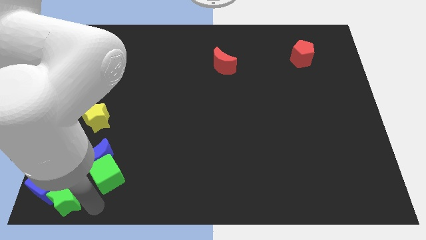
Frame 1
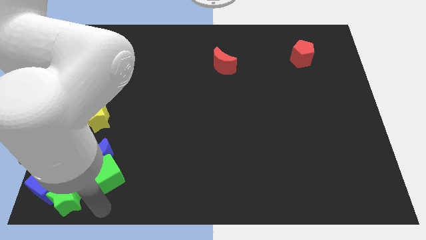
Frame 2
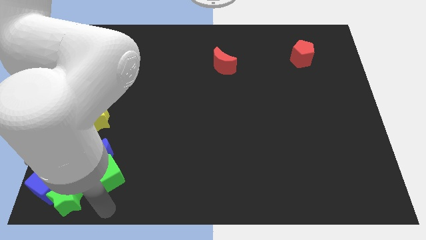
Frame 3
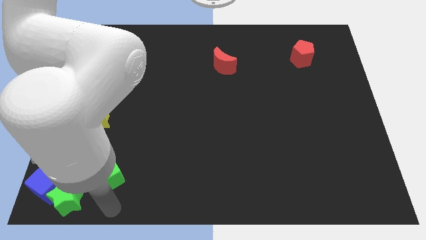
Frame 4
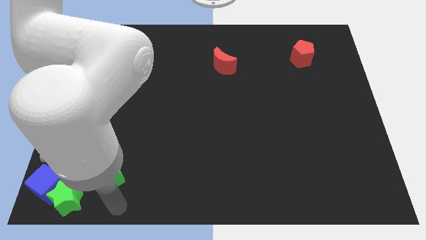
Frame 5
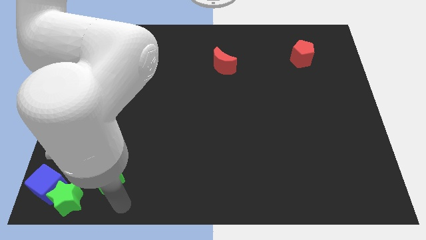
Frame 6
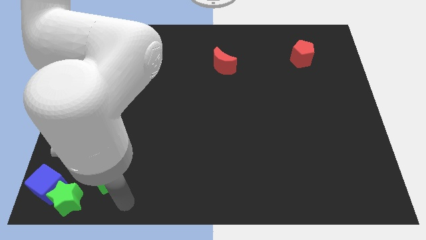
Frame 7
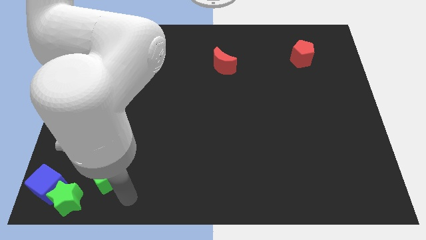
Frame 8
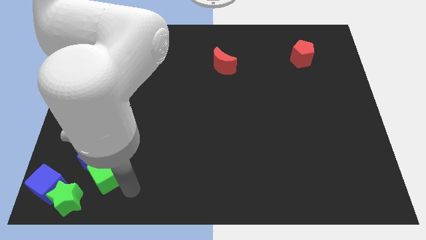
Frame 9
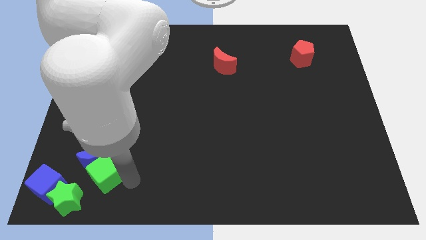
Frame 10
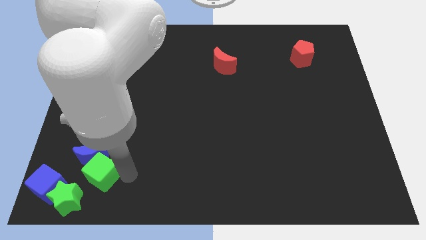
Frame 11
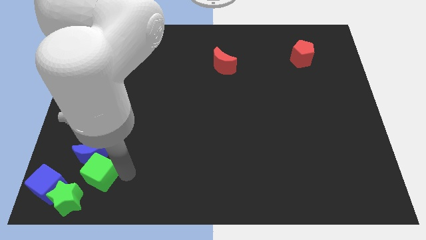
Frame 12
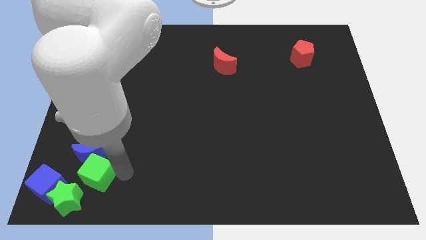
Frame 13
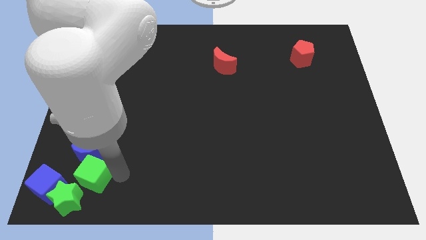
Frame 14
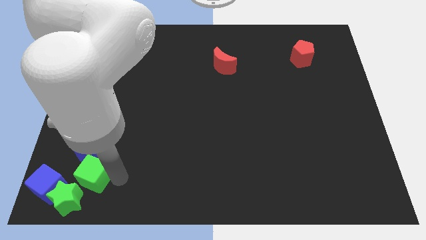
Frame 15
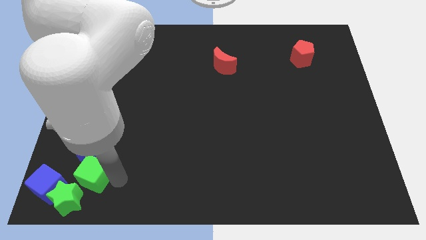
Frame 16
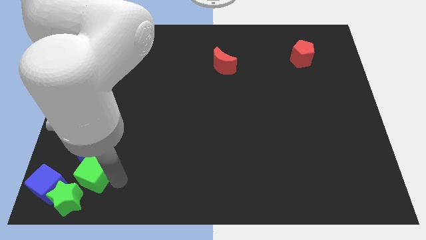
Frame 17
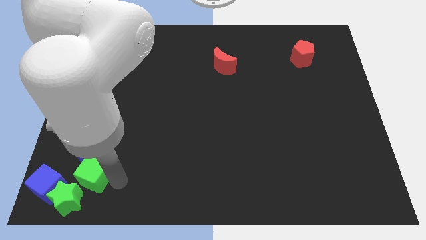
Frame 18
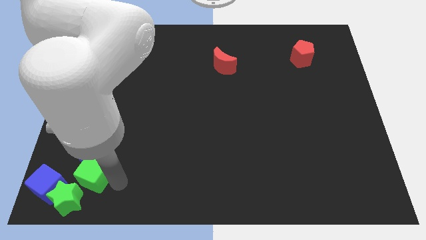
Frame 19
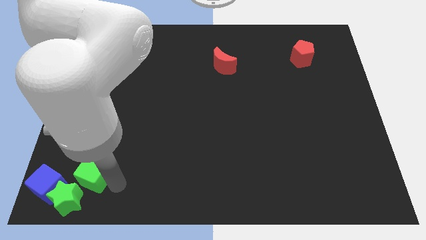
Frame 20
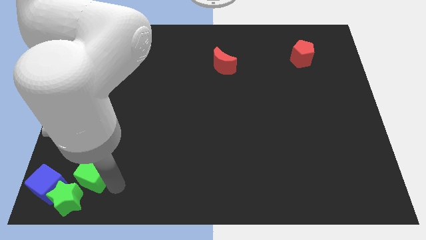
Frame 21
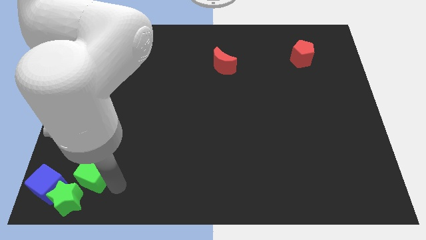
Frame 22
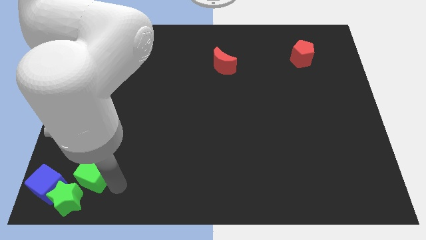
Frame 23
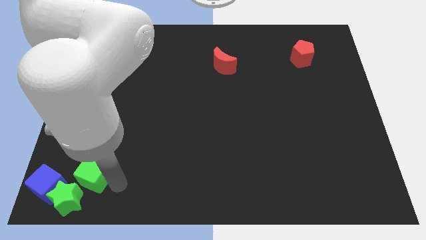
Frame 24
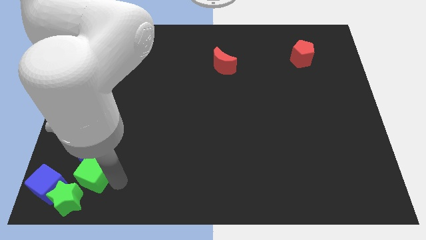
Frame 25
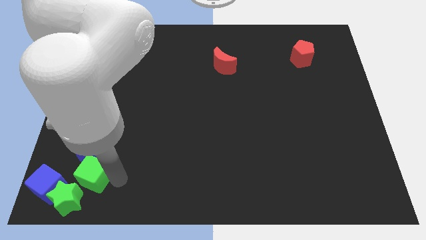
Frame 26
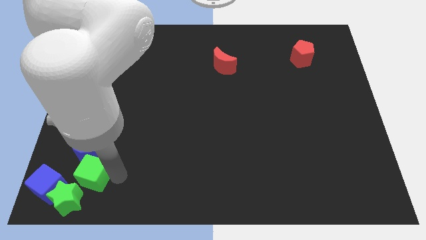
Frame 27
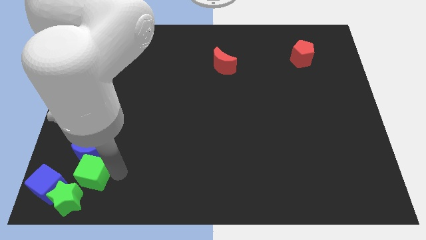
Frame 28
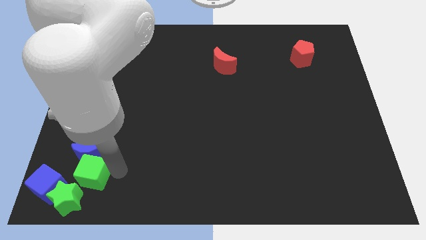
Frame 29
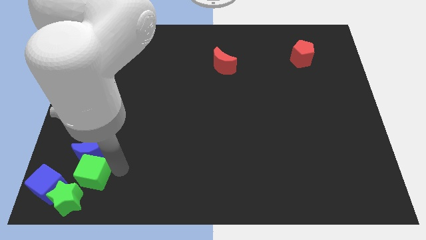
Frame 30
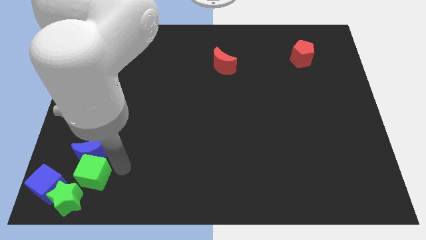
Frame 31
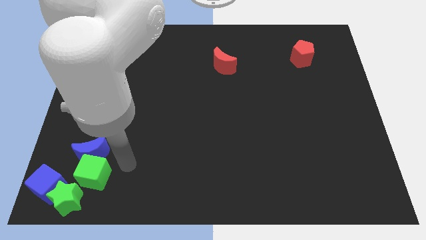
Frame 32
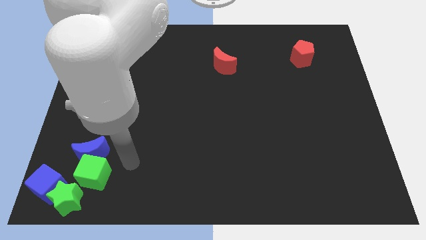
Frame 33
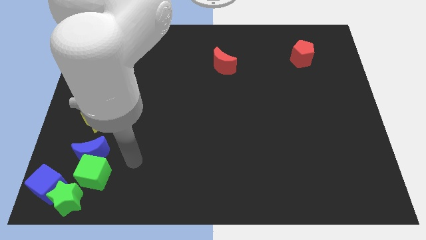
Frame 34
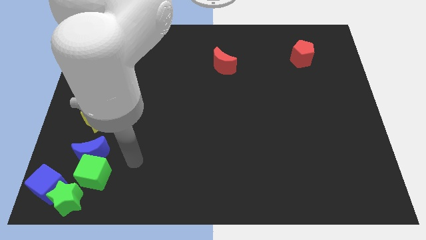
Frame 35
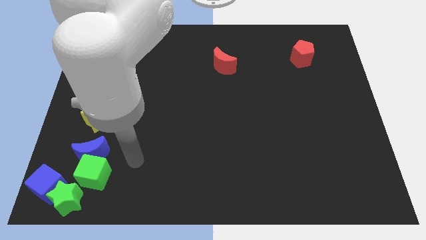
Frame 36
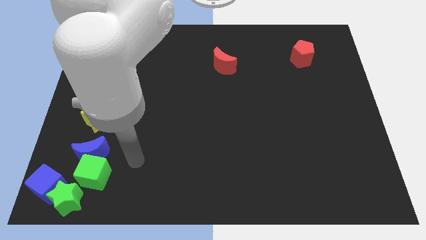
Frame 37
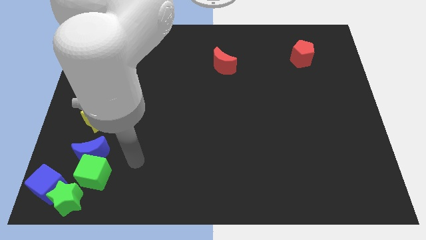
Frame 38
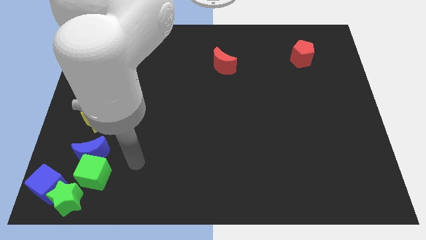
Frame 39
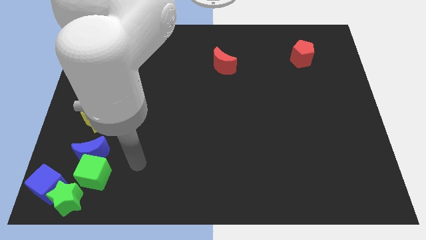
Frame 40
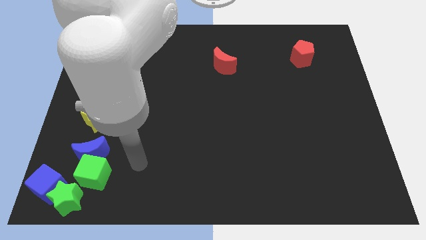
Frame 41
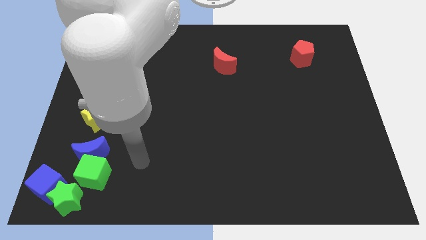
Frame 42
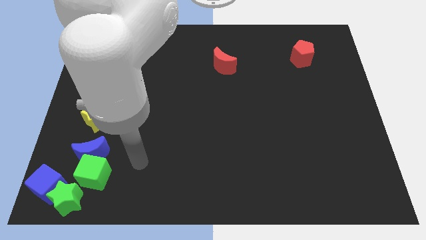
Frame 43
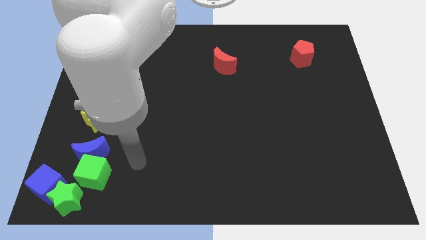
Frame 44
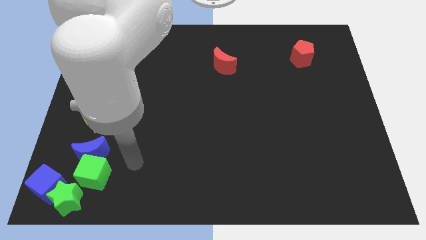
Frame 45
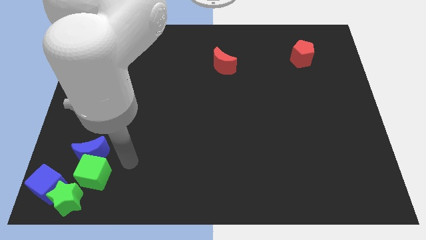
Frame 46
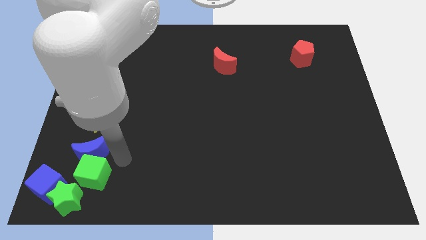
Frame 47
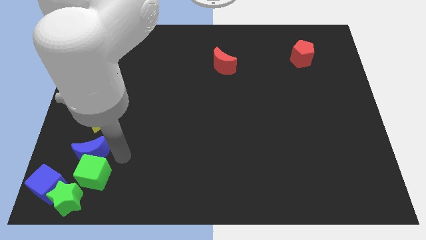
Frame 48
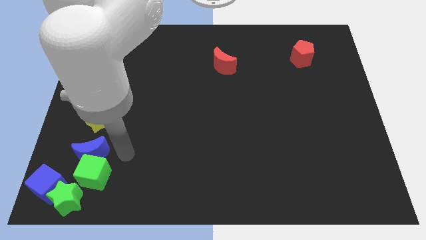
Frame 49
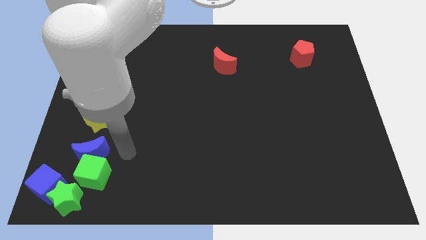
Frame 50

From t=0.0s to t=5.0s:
slightly push the green cube below to the blue crescent

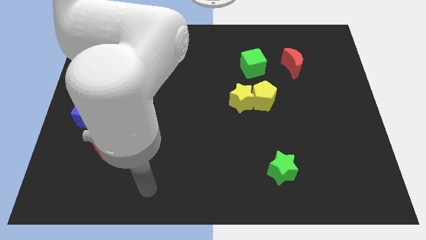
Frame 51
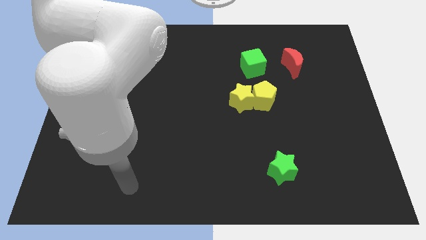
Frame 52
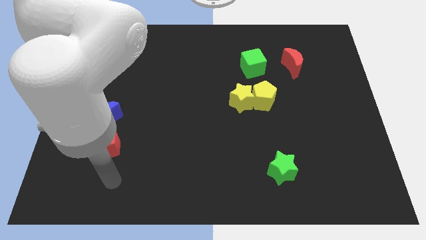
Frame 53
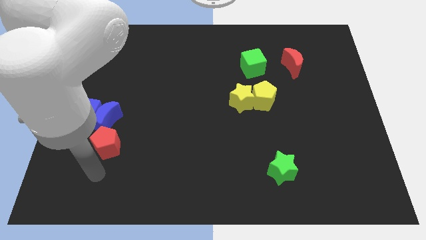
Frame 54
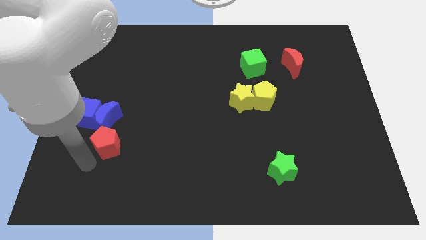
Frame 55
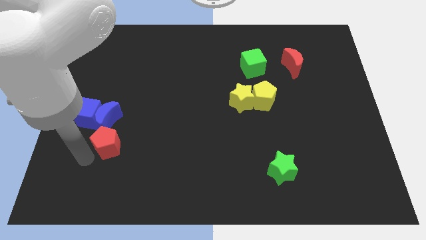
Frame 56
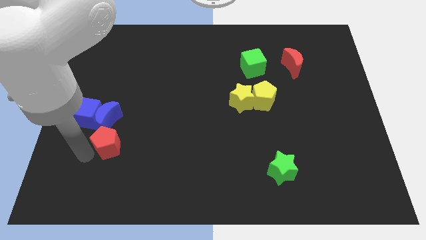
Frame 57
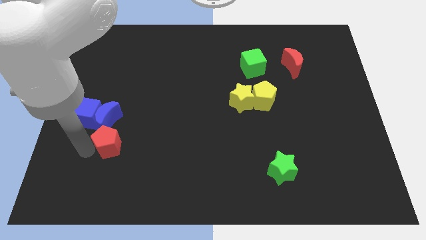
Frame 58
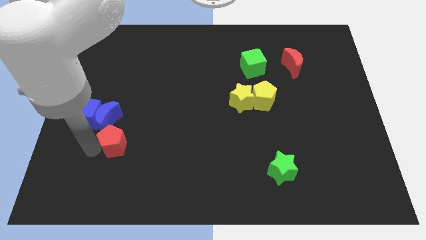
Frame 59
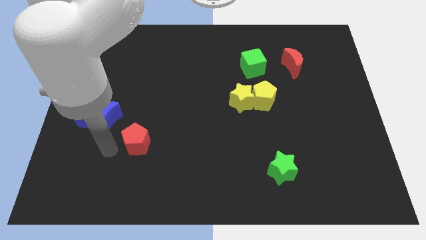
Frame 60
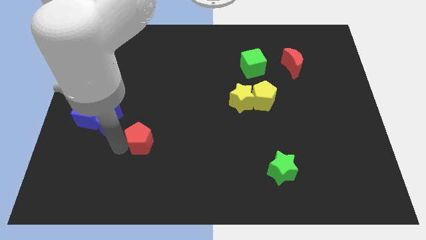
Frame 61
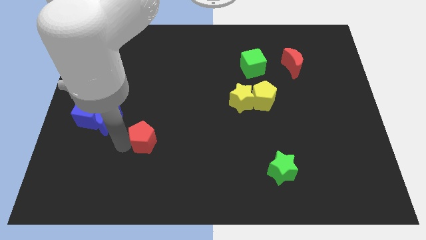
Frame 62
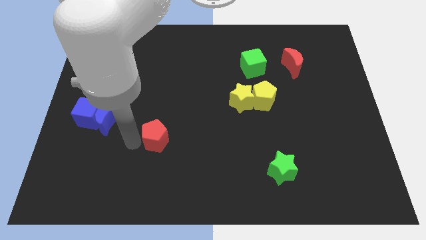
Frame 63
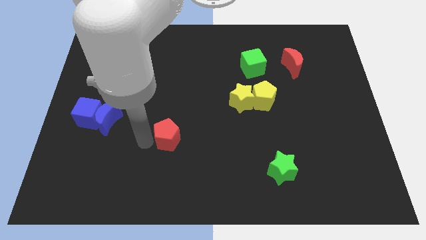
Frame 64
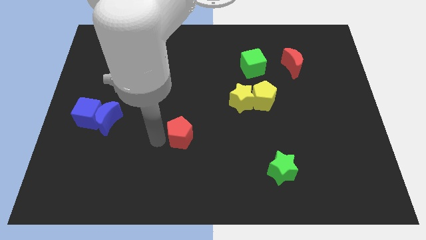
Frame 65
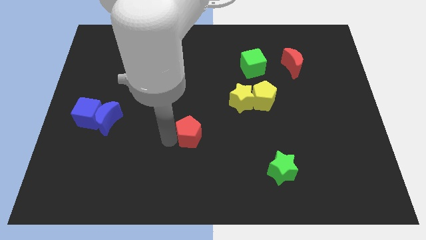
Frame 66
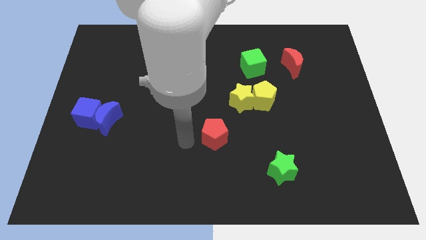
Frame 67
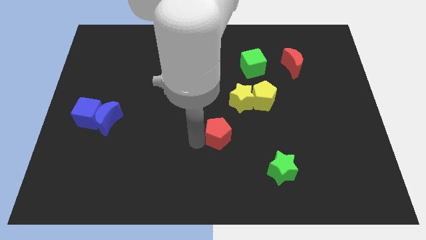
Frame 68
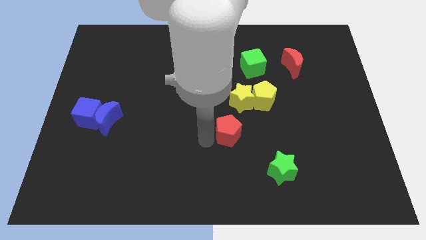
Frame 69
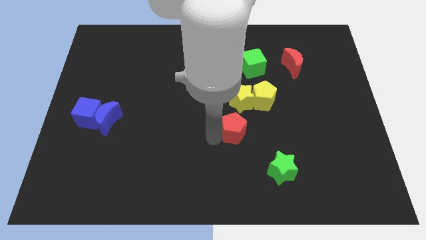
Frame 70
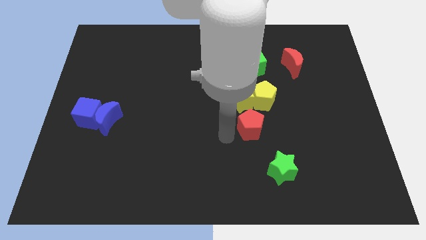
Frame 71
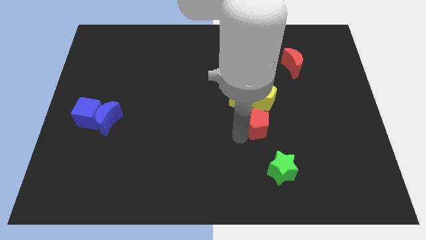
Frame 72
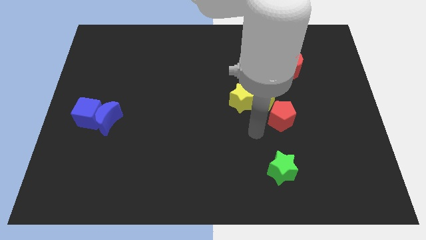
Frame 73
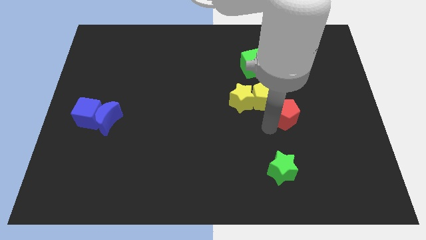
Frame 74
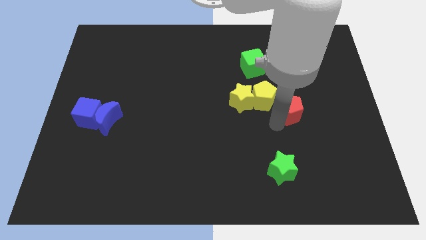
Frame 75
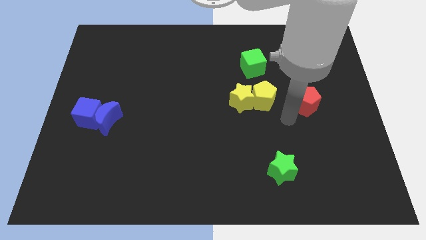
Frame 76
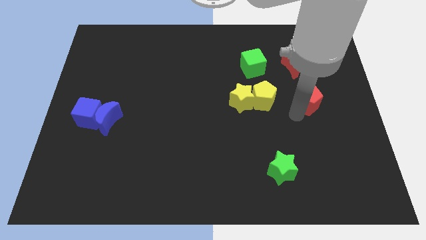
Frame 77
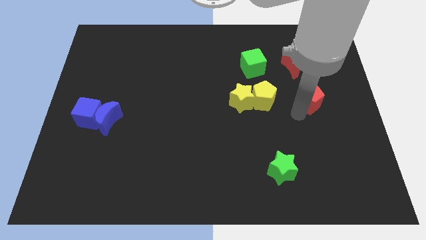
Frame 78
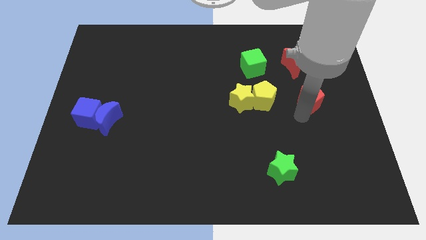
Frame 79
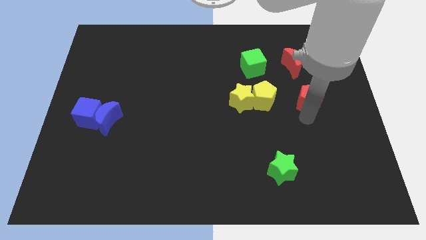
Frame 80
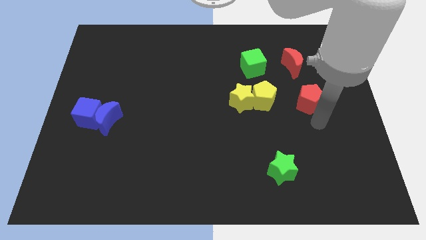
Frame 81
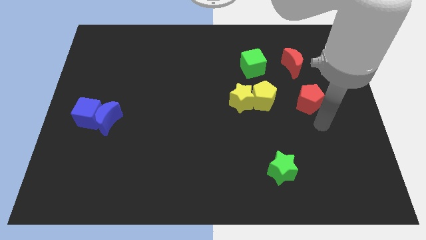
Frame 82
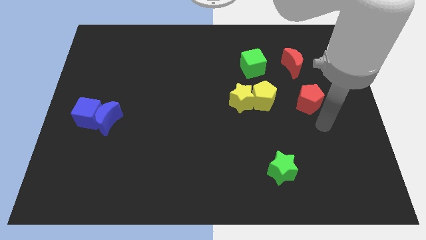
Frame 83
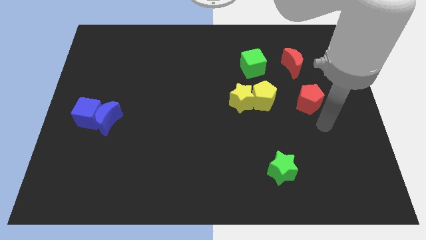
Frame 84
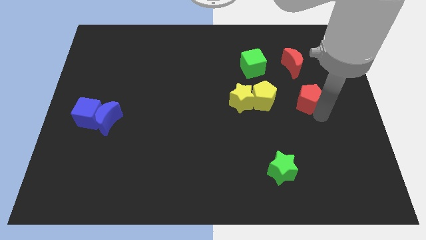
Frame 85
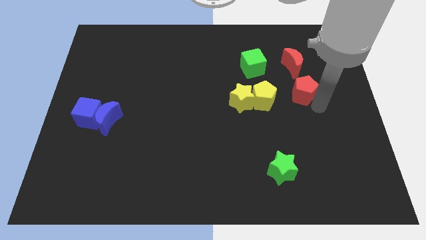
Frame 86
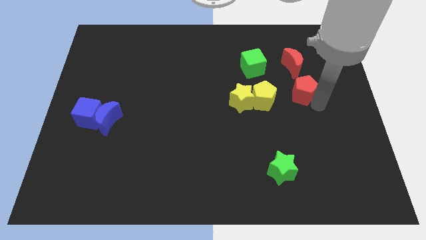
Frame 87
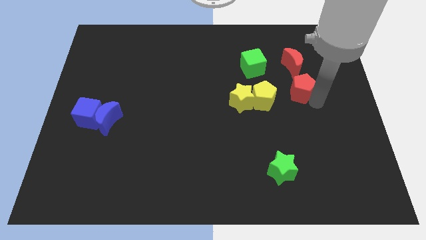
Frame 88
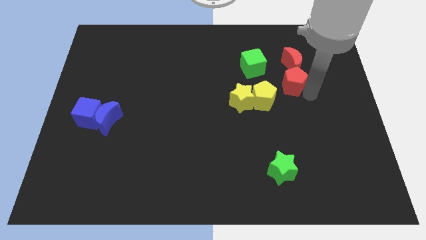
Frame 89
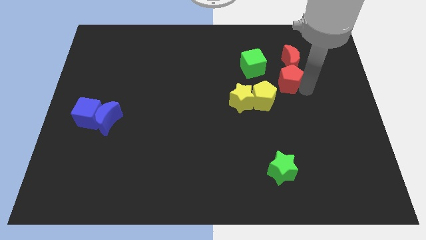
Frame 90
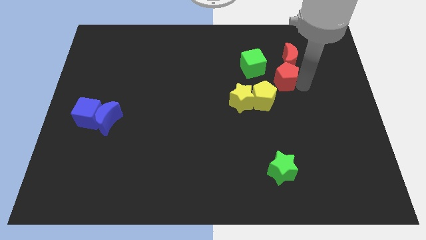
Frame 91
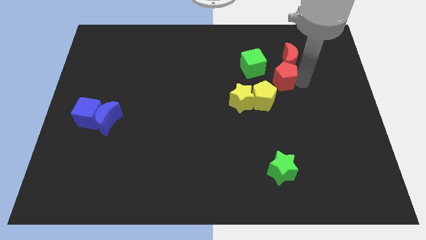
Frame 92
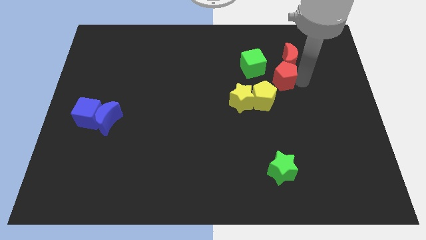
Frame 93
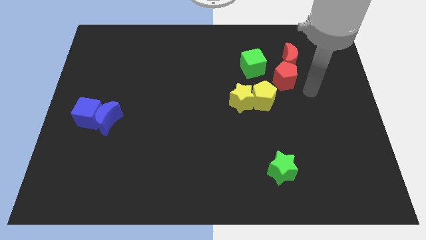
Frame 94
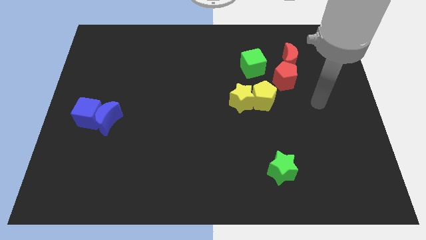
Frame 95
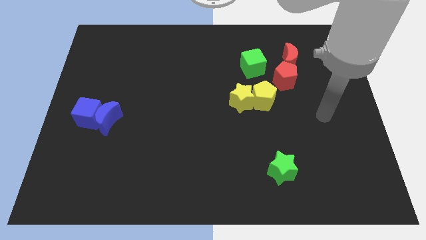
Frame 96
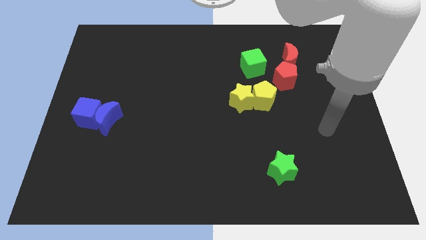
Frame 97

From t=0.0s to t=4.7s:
push the red pentagon into the red crescent
